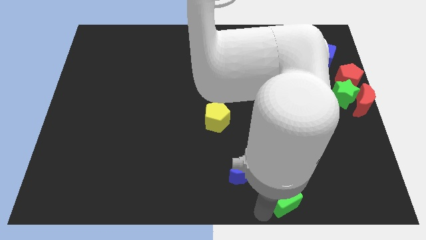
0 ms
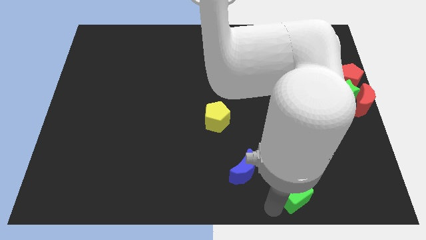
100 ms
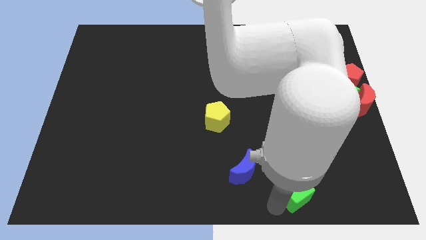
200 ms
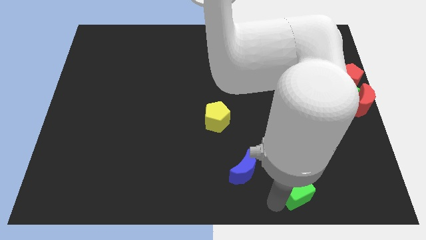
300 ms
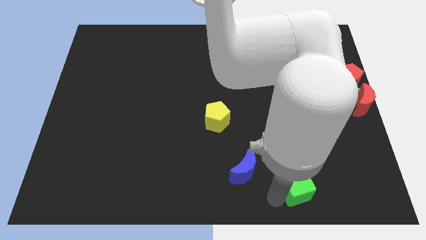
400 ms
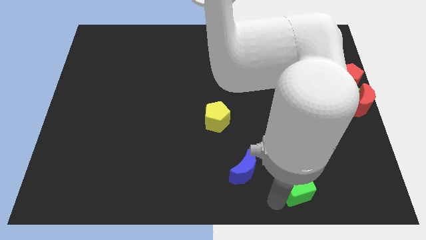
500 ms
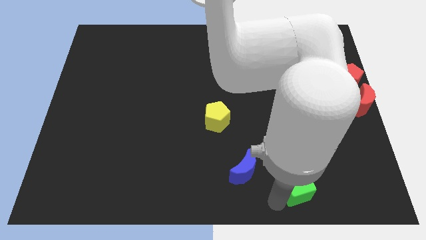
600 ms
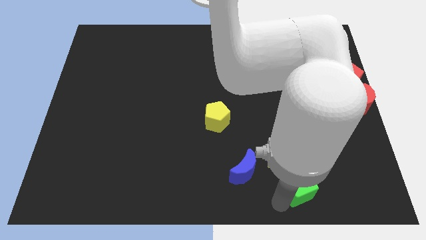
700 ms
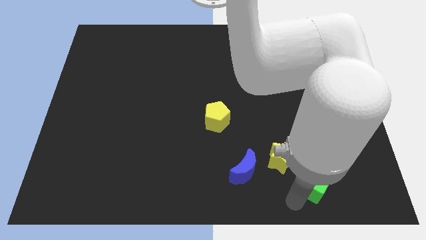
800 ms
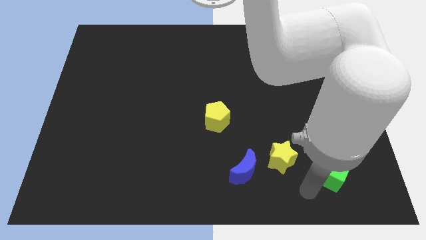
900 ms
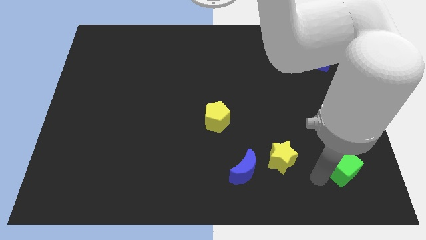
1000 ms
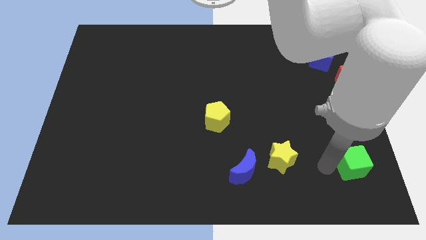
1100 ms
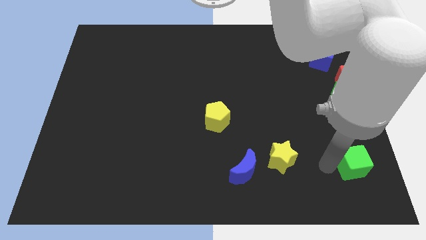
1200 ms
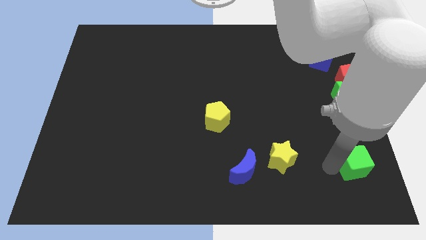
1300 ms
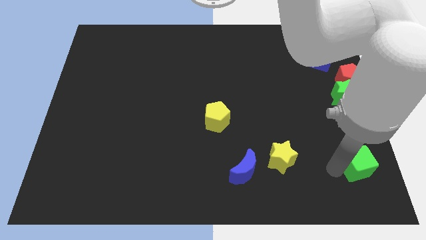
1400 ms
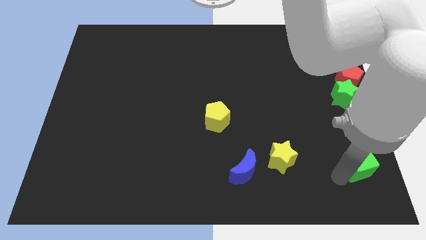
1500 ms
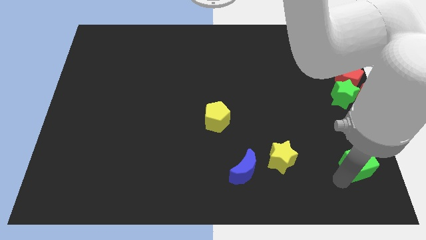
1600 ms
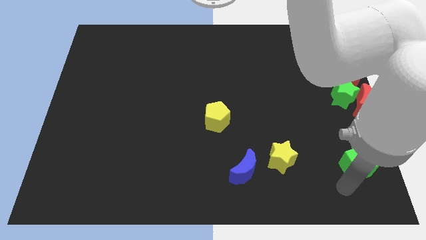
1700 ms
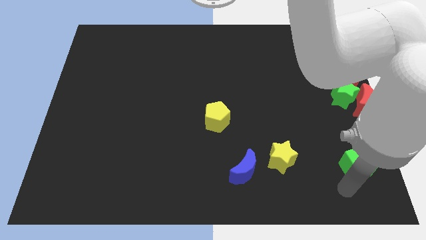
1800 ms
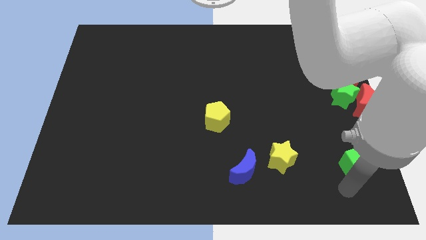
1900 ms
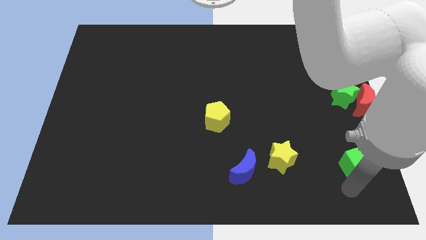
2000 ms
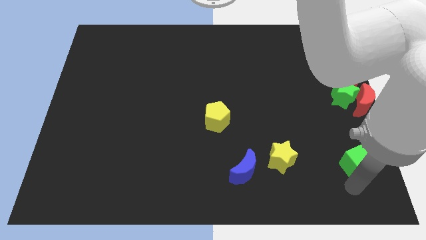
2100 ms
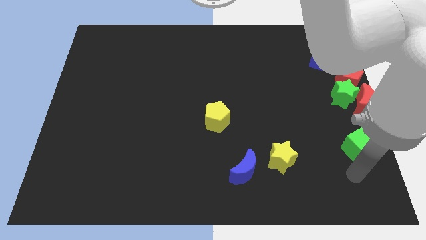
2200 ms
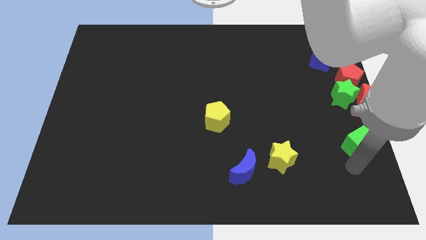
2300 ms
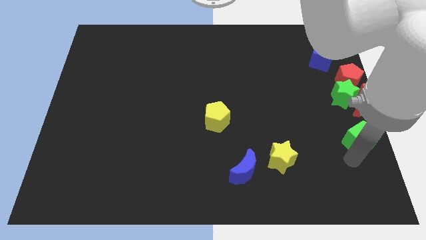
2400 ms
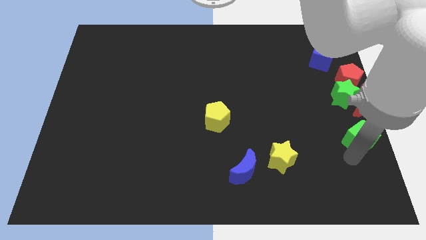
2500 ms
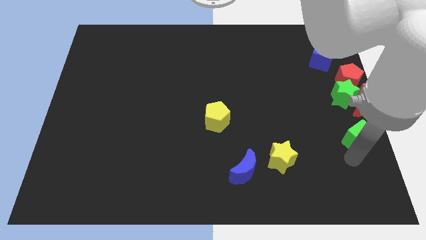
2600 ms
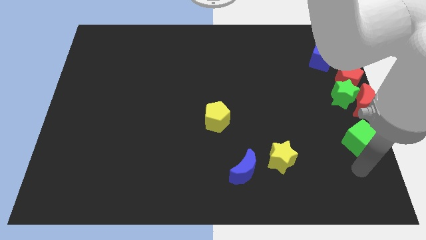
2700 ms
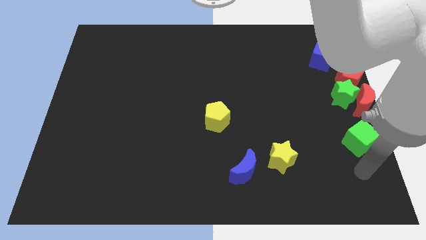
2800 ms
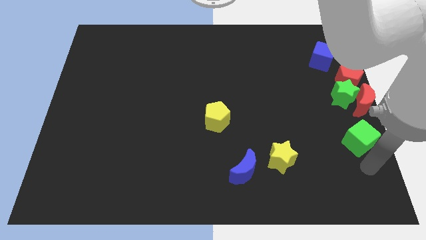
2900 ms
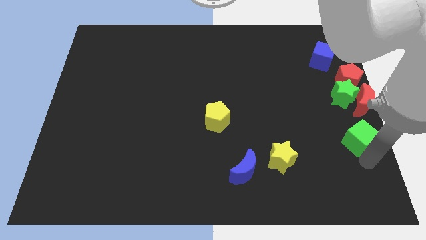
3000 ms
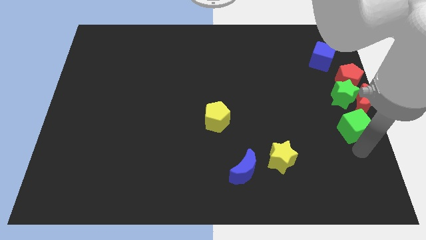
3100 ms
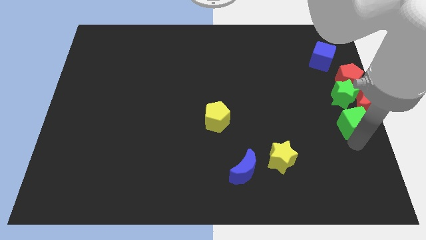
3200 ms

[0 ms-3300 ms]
move the green cube to the bottom of the red crescent

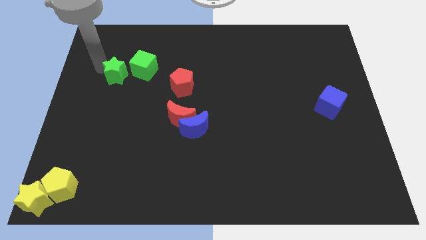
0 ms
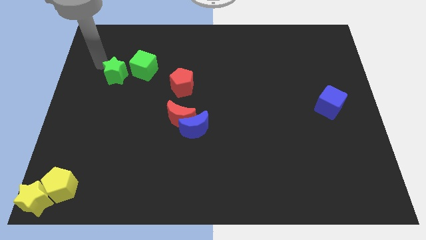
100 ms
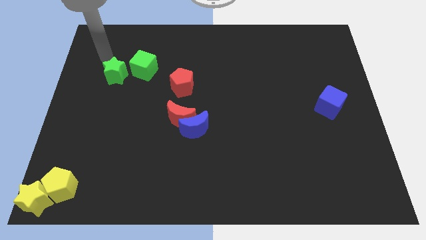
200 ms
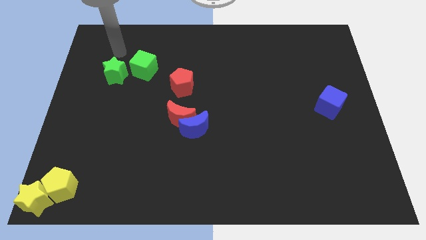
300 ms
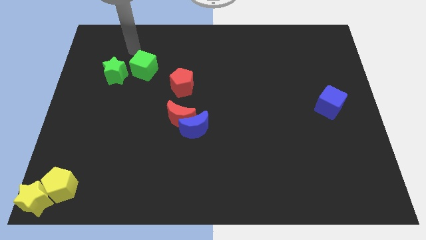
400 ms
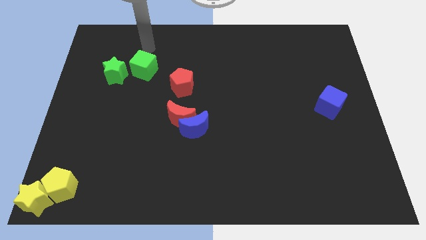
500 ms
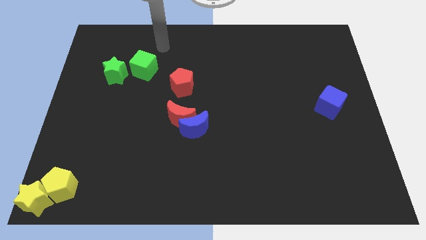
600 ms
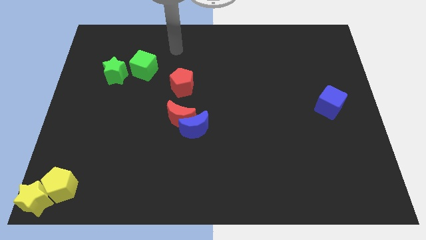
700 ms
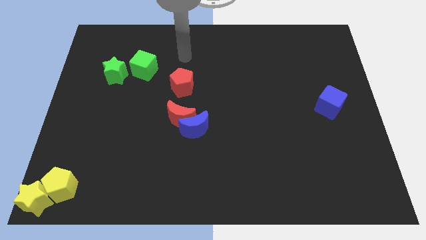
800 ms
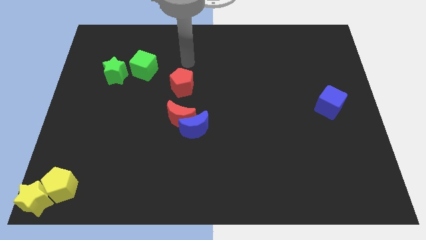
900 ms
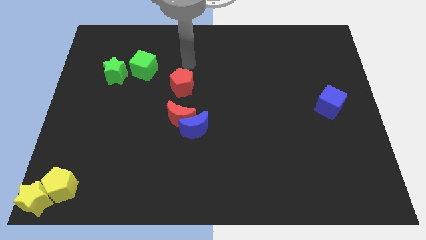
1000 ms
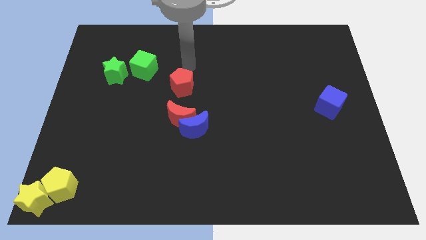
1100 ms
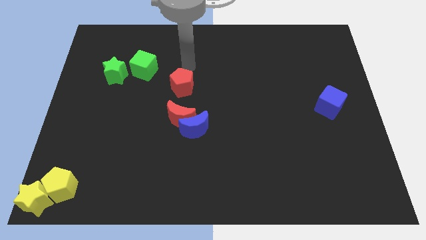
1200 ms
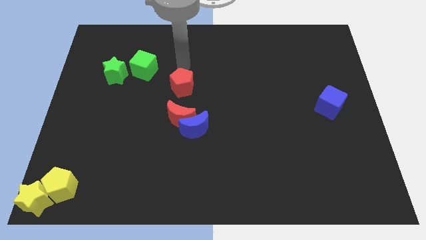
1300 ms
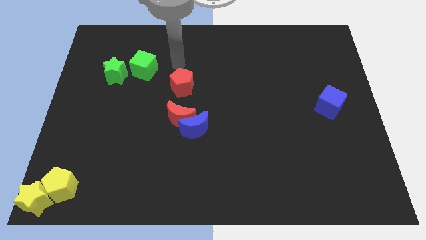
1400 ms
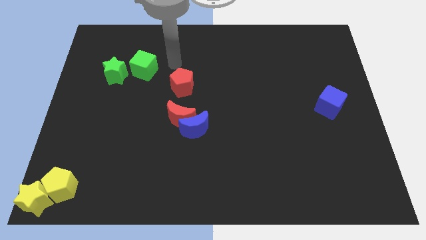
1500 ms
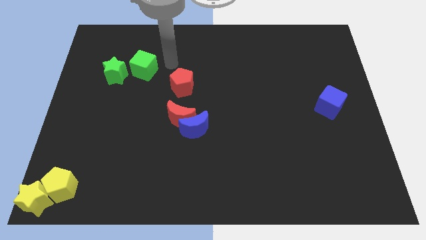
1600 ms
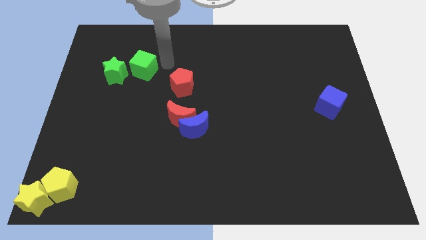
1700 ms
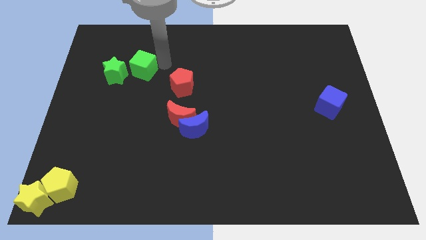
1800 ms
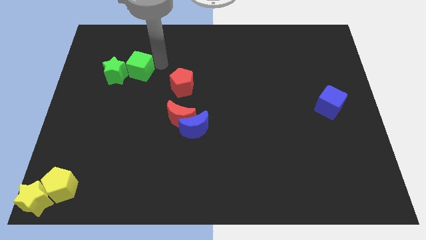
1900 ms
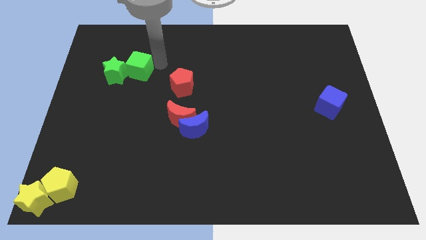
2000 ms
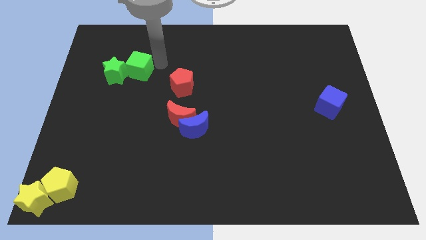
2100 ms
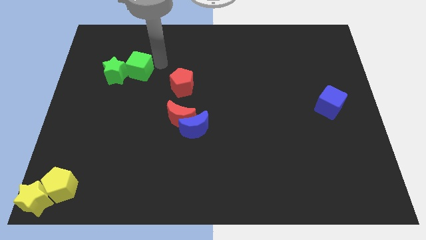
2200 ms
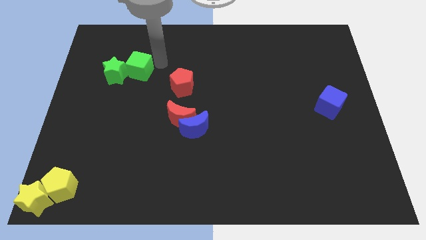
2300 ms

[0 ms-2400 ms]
move the green cube towards the green star

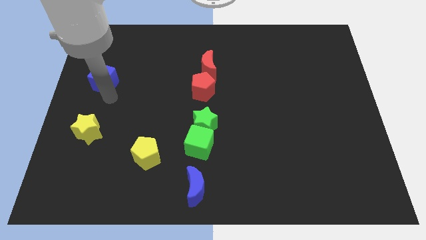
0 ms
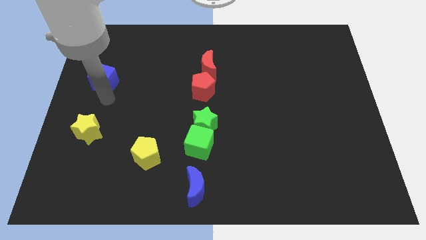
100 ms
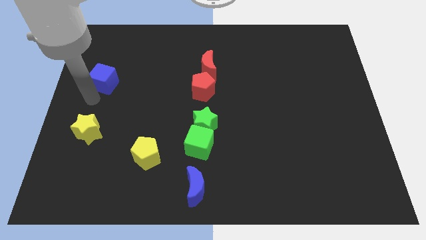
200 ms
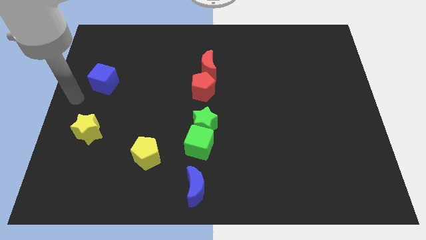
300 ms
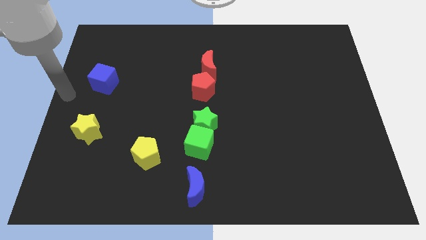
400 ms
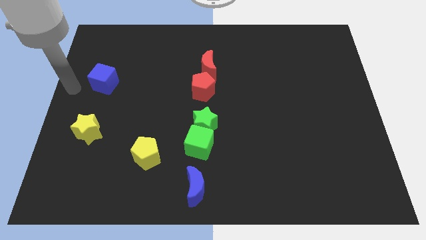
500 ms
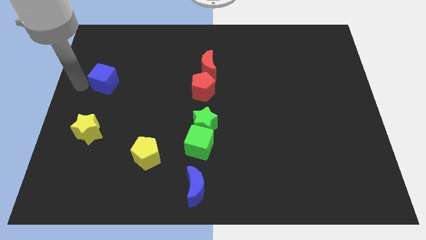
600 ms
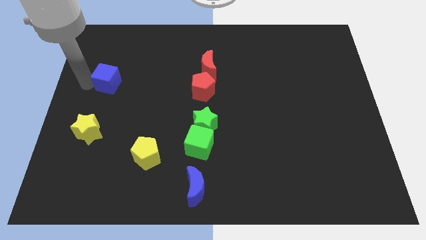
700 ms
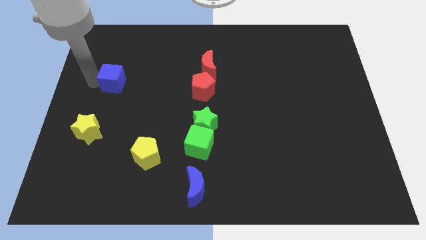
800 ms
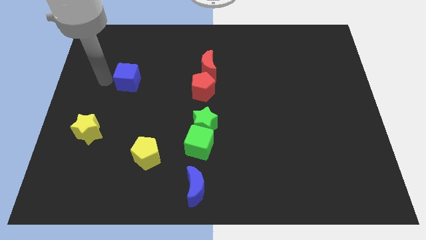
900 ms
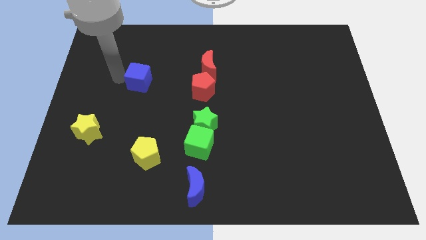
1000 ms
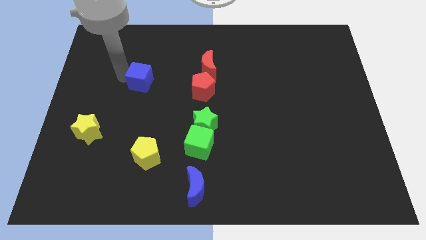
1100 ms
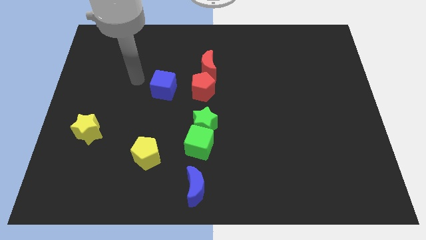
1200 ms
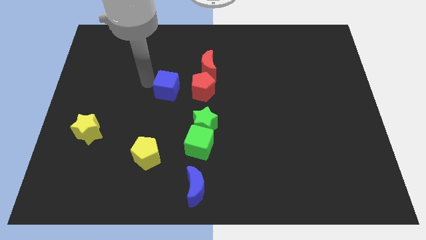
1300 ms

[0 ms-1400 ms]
push blue cube towards red pentagon

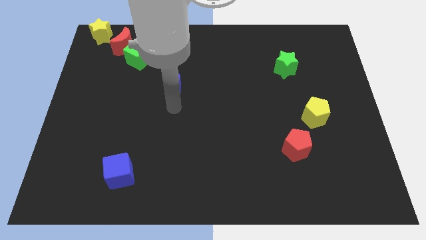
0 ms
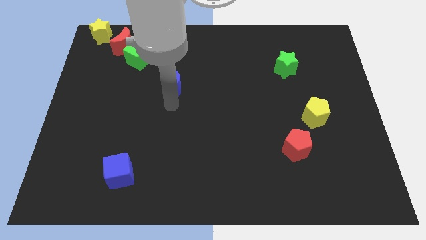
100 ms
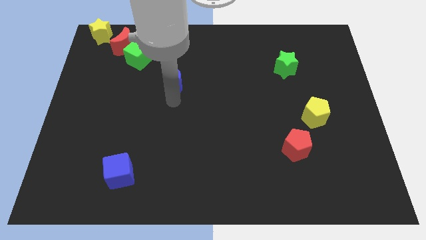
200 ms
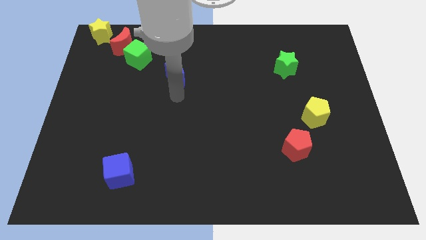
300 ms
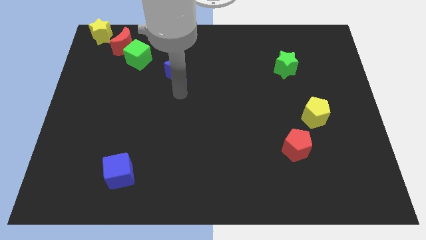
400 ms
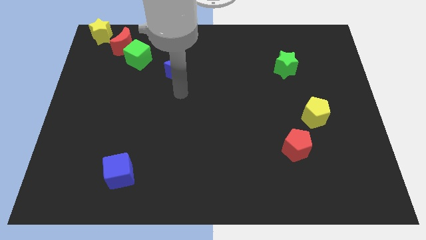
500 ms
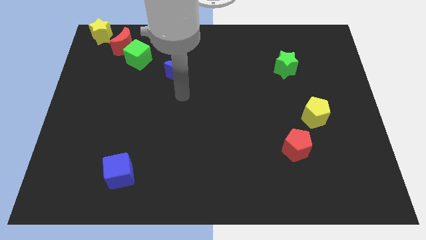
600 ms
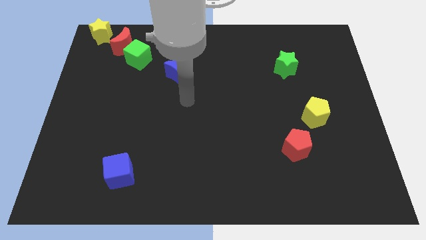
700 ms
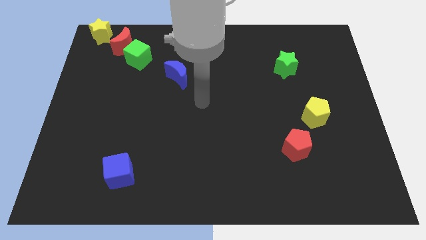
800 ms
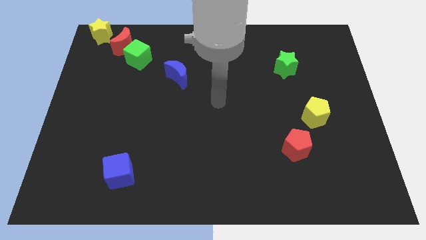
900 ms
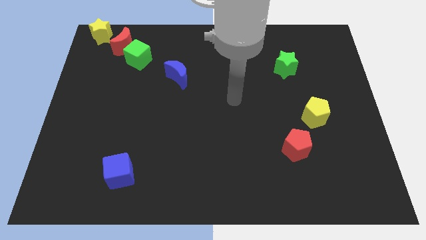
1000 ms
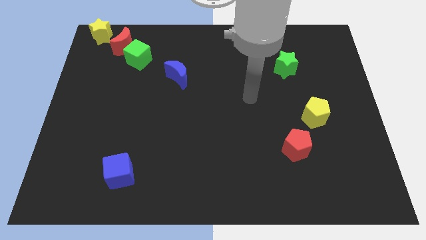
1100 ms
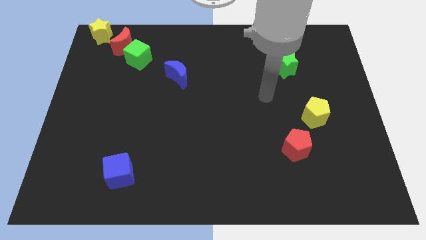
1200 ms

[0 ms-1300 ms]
push the blue moon below the green cube

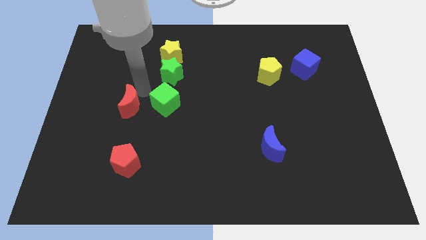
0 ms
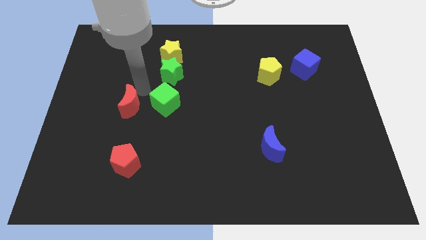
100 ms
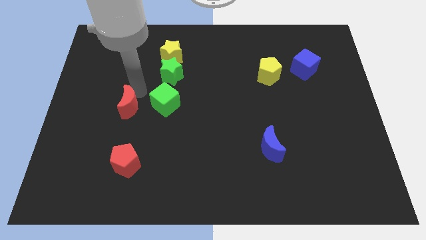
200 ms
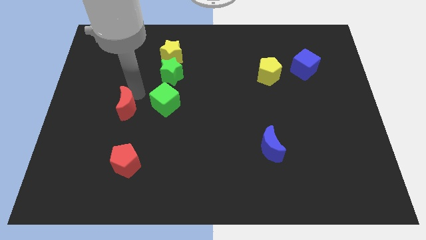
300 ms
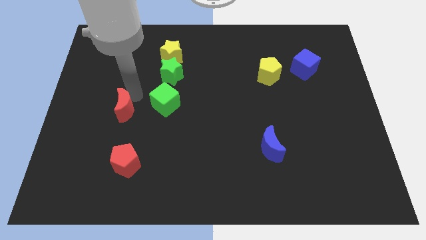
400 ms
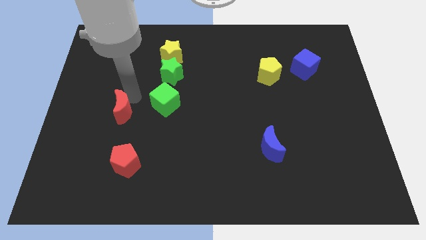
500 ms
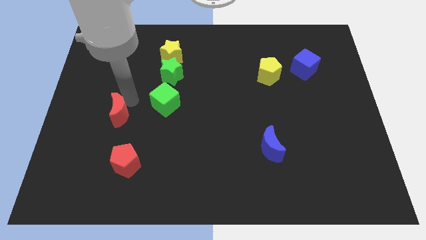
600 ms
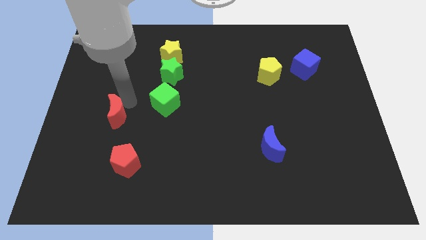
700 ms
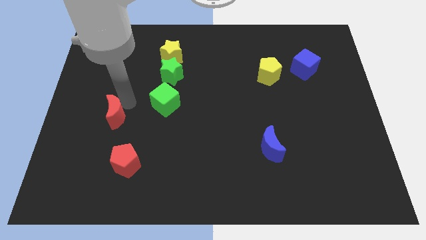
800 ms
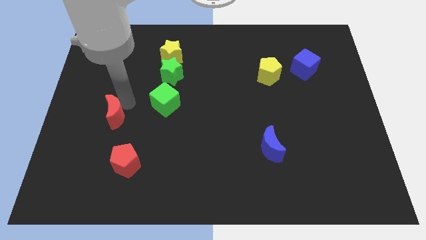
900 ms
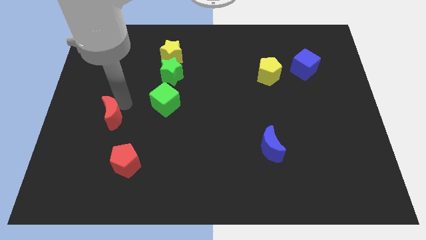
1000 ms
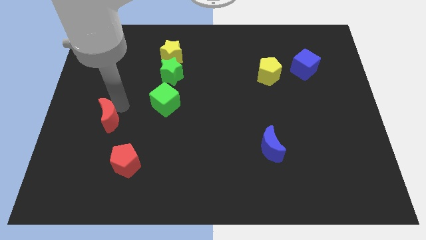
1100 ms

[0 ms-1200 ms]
push the red crescent diagonally left to the red pentagon
